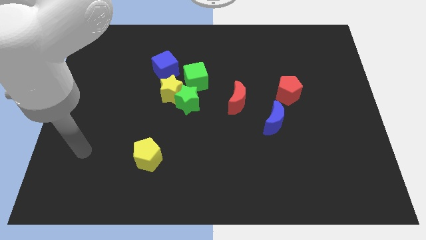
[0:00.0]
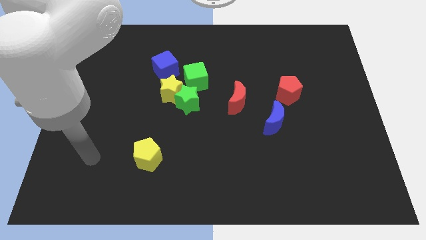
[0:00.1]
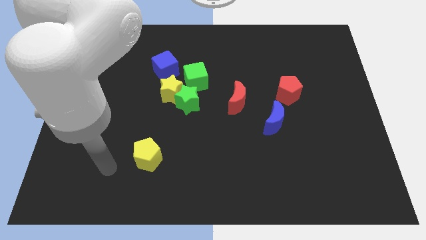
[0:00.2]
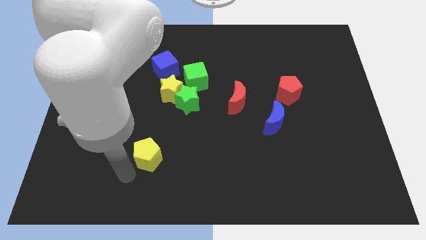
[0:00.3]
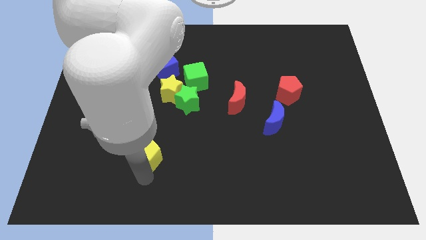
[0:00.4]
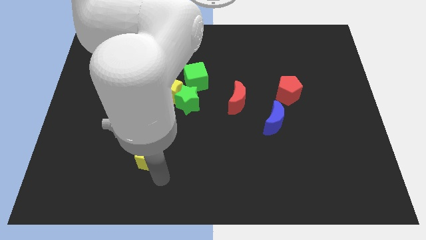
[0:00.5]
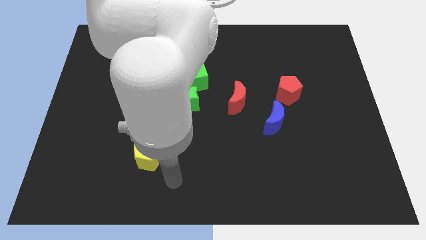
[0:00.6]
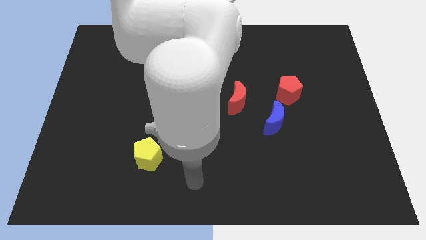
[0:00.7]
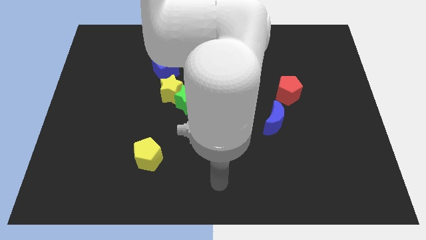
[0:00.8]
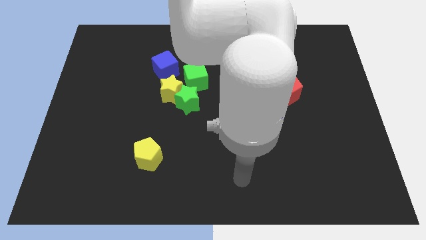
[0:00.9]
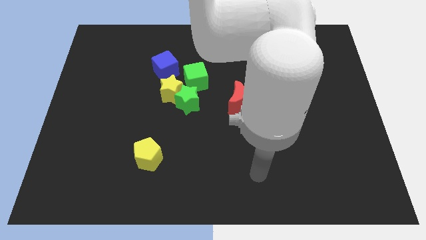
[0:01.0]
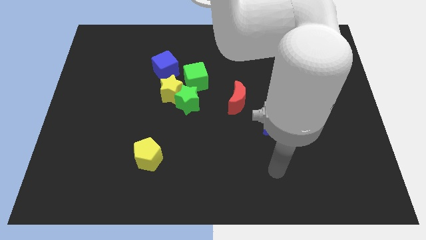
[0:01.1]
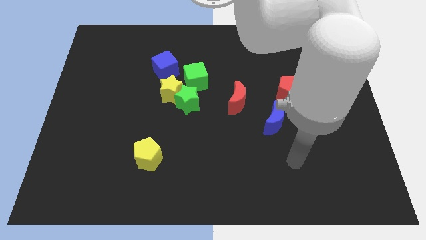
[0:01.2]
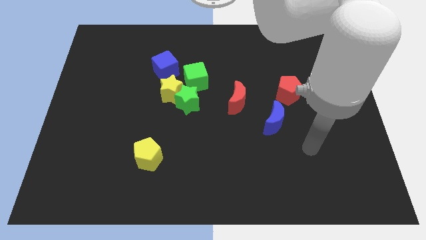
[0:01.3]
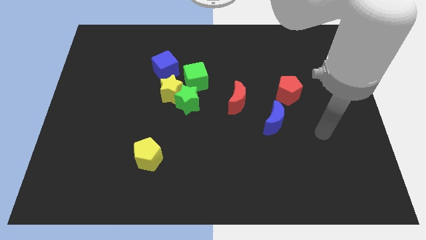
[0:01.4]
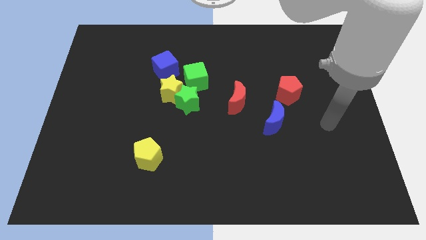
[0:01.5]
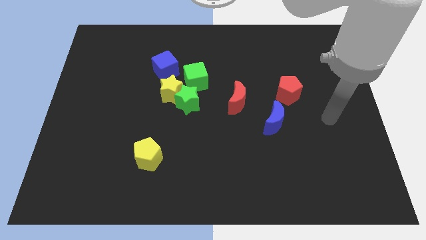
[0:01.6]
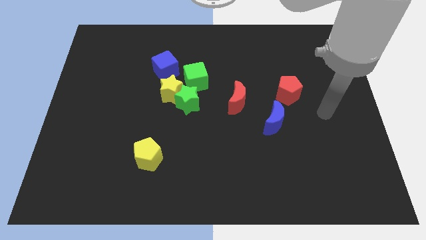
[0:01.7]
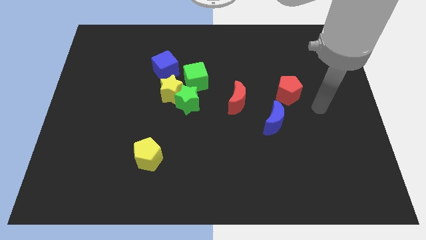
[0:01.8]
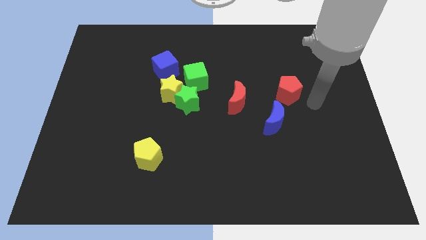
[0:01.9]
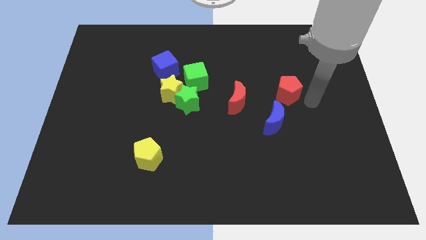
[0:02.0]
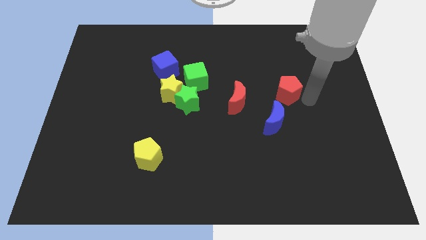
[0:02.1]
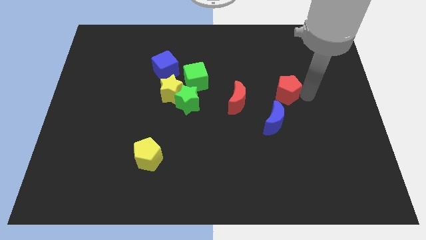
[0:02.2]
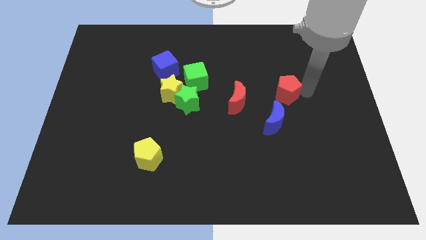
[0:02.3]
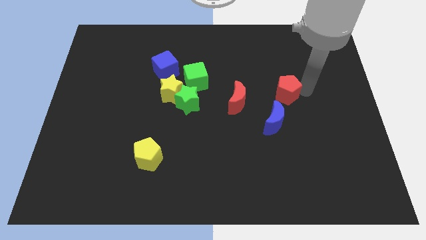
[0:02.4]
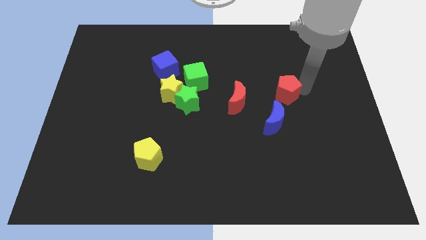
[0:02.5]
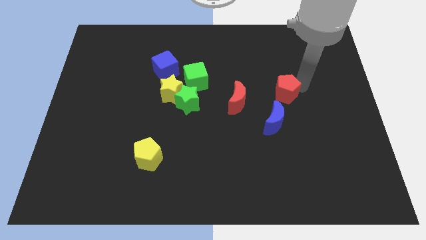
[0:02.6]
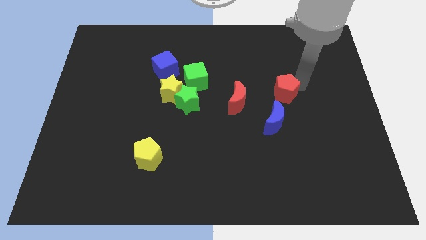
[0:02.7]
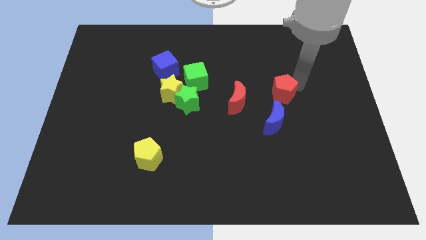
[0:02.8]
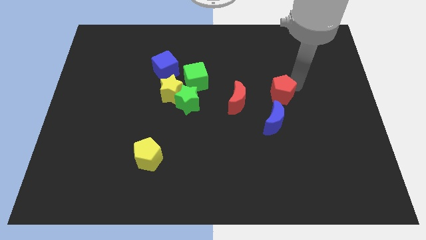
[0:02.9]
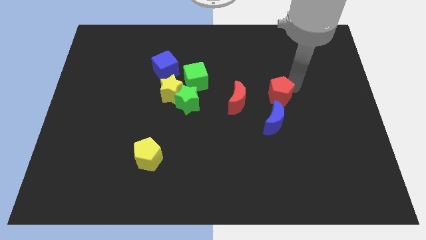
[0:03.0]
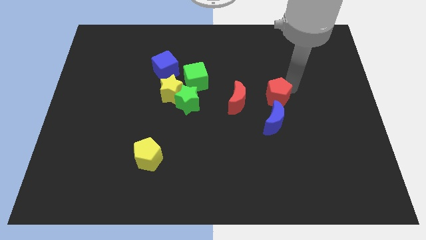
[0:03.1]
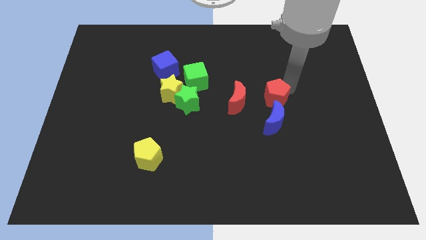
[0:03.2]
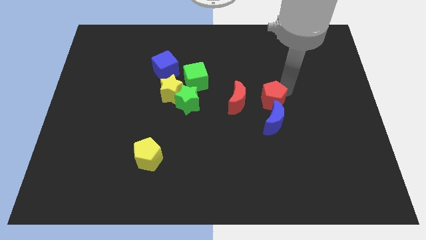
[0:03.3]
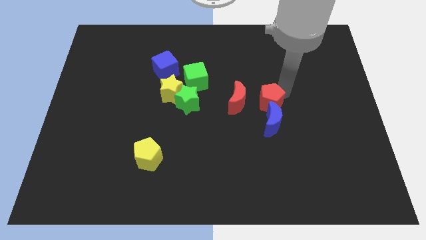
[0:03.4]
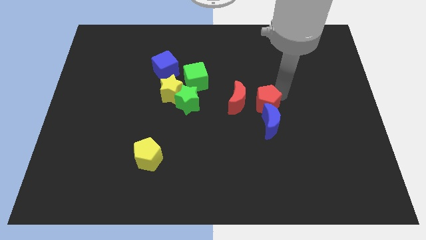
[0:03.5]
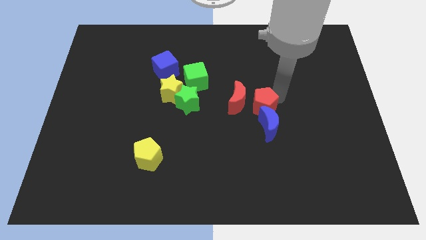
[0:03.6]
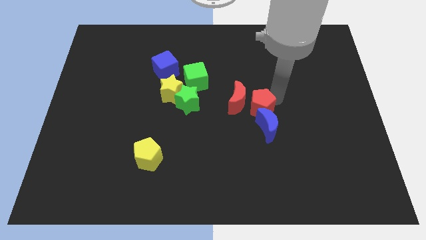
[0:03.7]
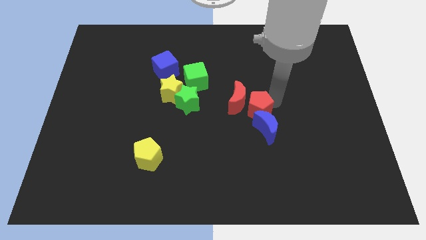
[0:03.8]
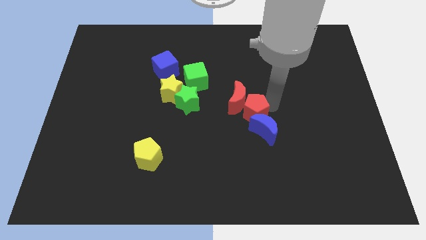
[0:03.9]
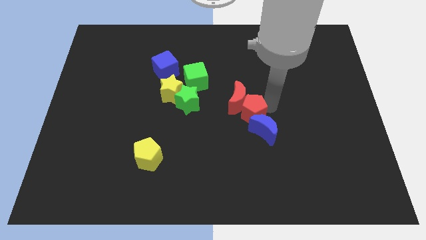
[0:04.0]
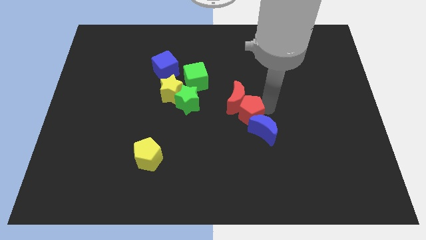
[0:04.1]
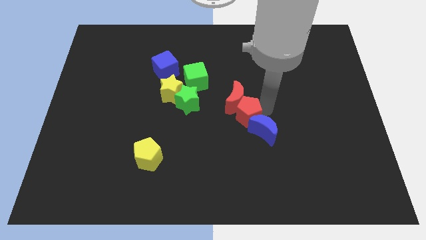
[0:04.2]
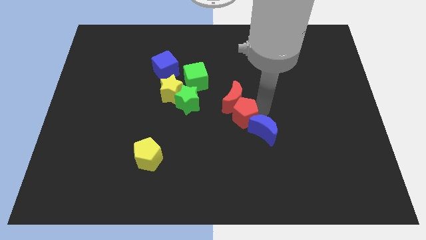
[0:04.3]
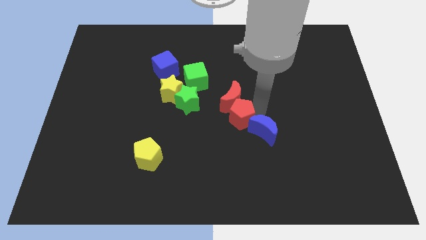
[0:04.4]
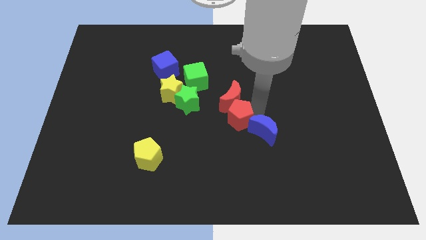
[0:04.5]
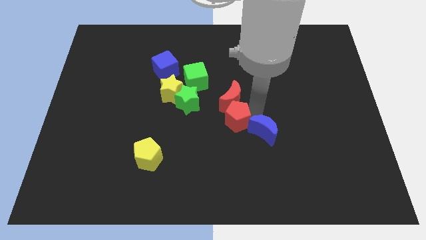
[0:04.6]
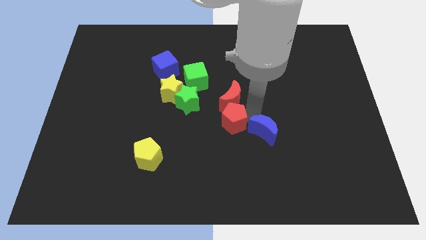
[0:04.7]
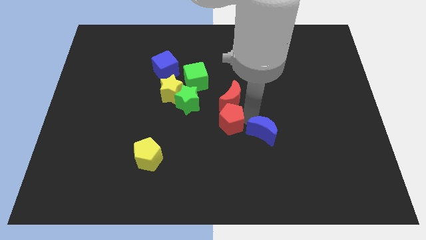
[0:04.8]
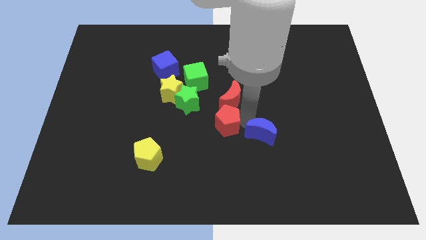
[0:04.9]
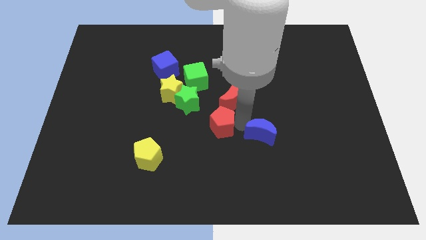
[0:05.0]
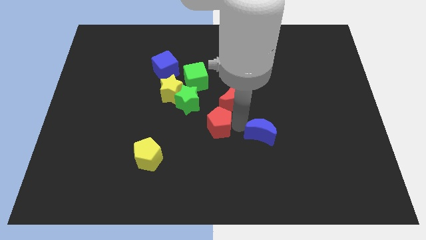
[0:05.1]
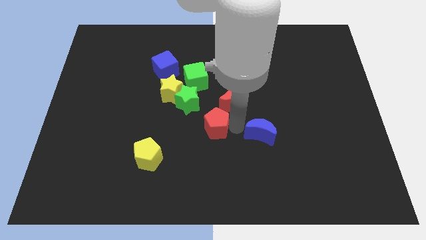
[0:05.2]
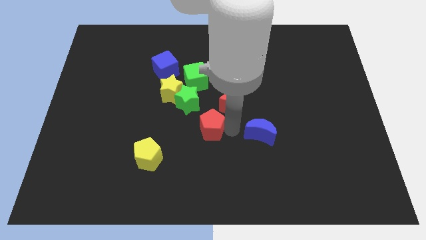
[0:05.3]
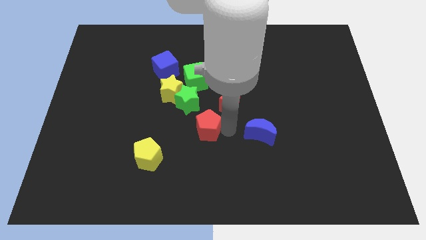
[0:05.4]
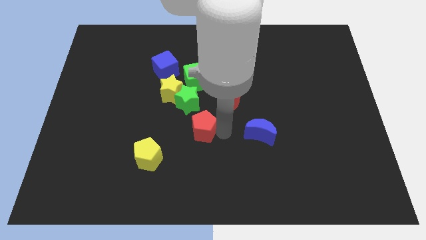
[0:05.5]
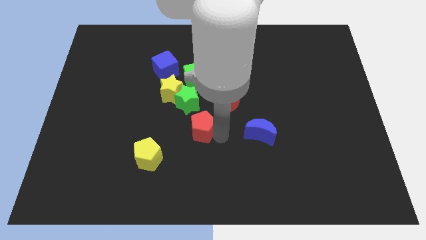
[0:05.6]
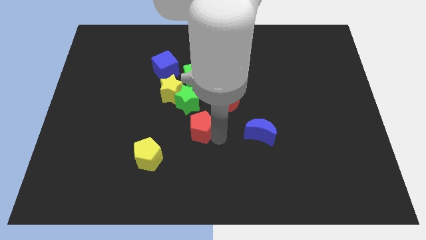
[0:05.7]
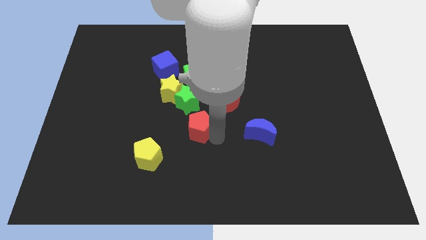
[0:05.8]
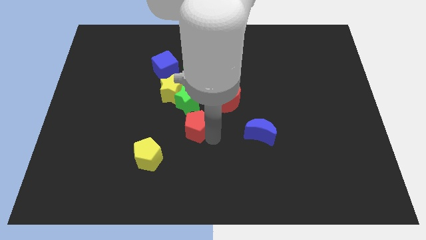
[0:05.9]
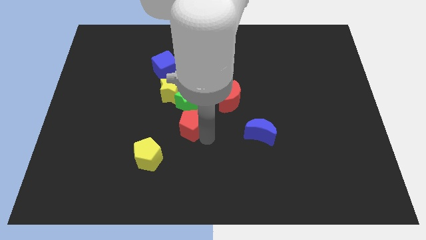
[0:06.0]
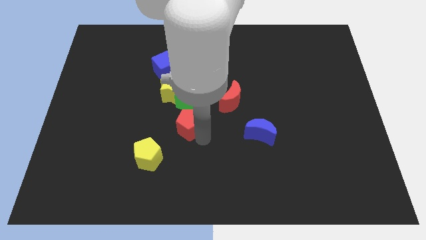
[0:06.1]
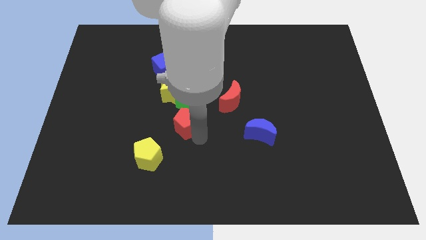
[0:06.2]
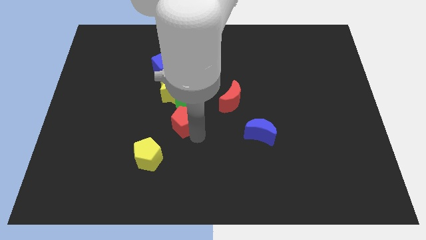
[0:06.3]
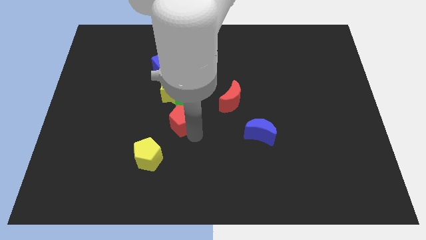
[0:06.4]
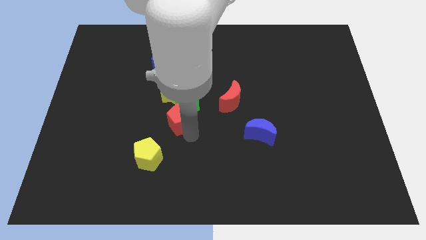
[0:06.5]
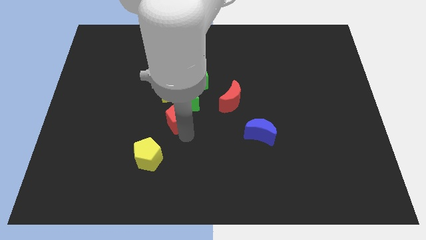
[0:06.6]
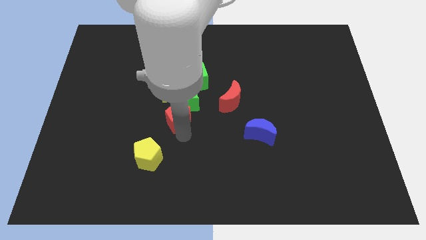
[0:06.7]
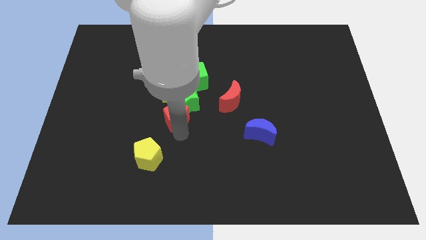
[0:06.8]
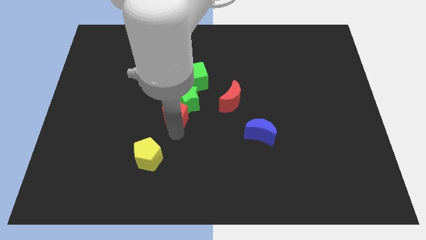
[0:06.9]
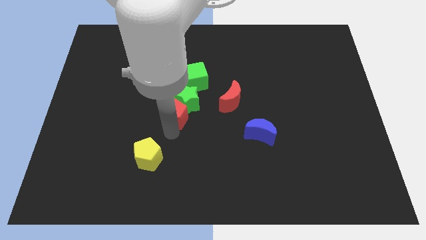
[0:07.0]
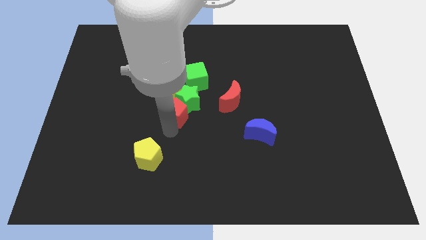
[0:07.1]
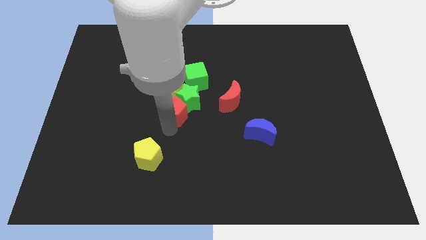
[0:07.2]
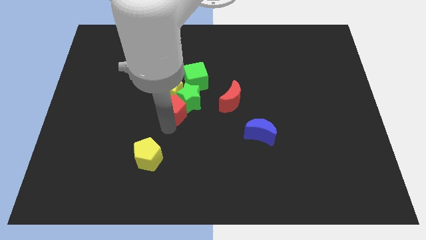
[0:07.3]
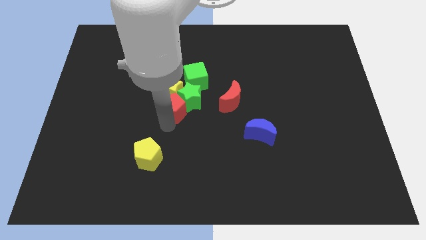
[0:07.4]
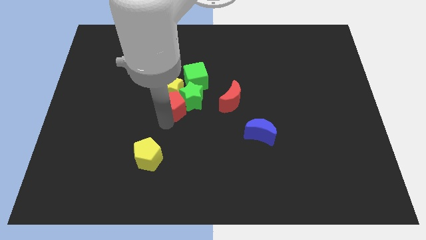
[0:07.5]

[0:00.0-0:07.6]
slide the red pentagon next to the yellow star

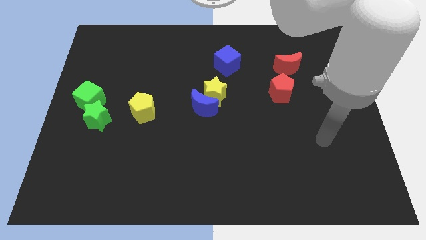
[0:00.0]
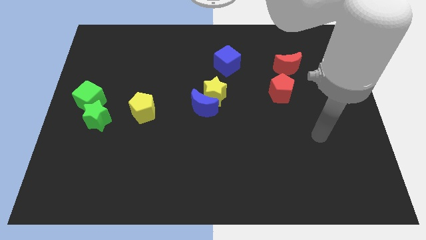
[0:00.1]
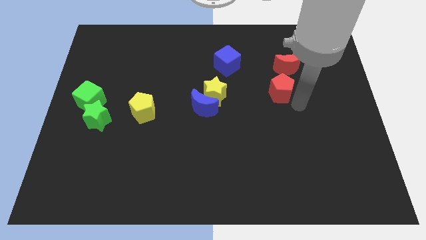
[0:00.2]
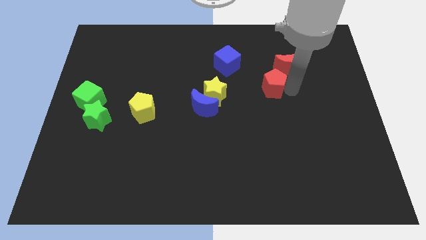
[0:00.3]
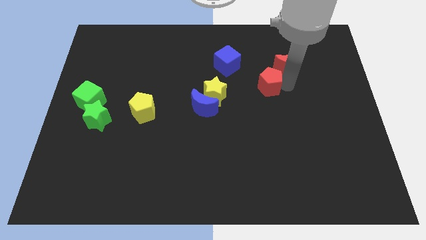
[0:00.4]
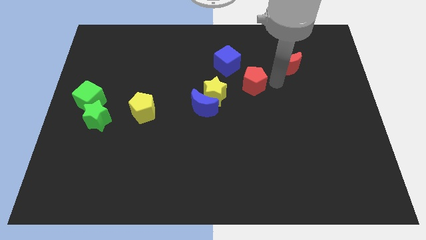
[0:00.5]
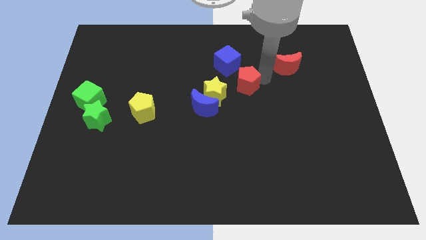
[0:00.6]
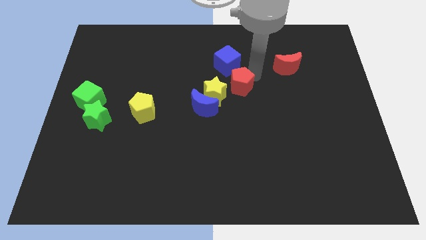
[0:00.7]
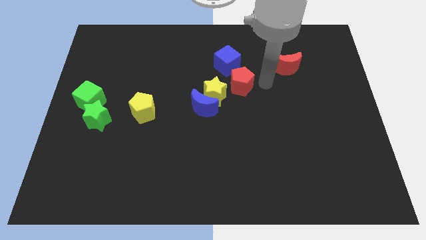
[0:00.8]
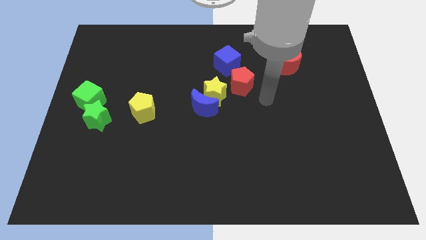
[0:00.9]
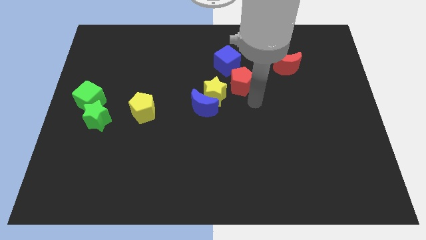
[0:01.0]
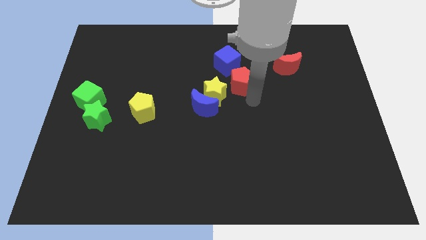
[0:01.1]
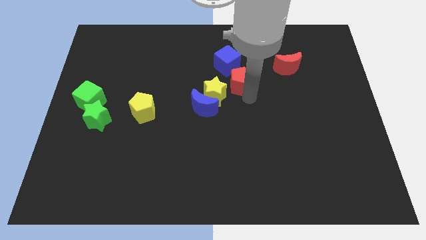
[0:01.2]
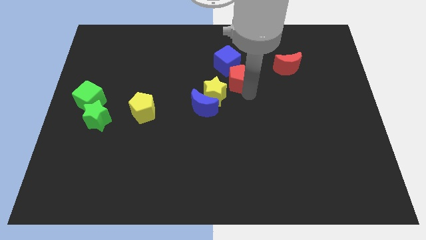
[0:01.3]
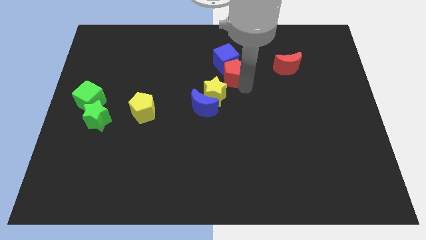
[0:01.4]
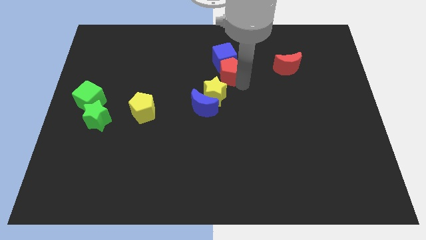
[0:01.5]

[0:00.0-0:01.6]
put the red pentagon to the blue cube
